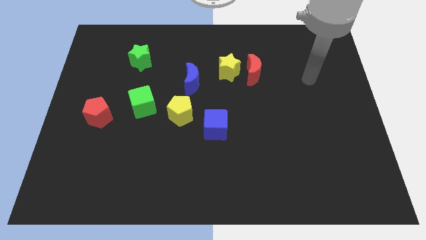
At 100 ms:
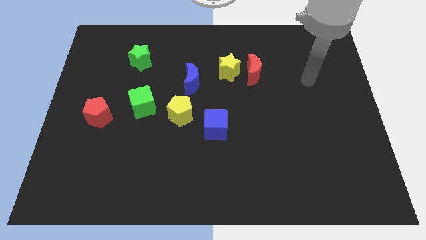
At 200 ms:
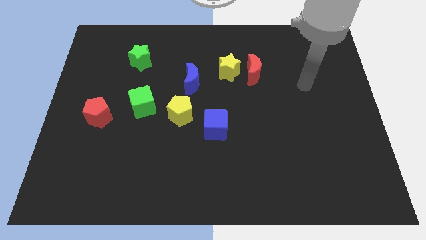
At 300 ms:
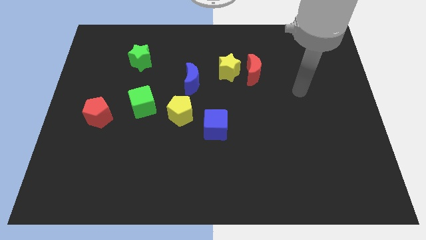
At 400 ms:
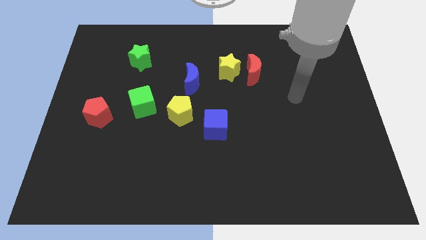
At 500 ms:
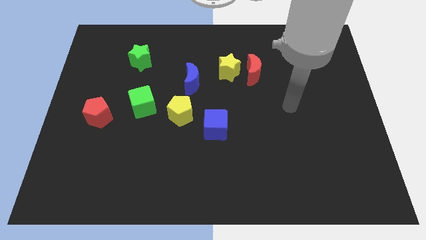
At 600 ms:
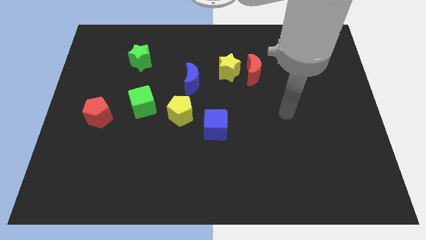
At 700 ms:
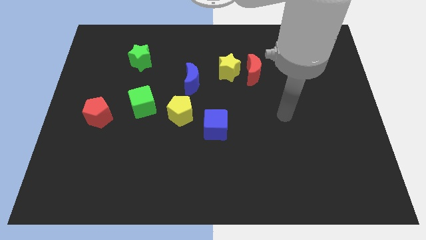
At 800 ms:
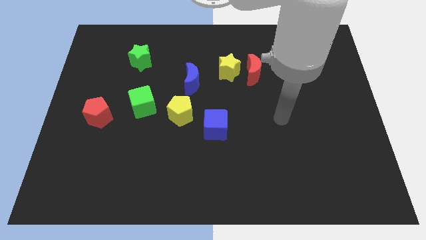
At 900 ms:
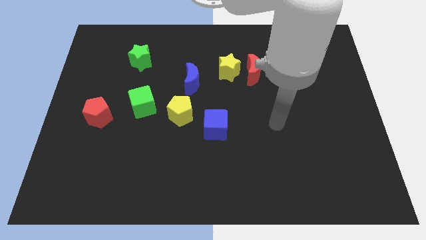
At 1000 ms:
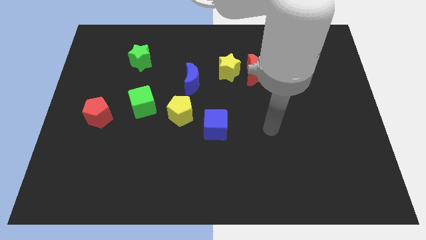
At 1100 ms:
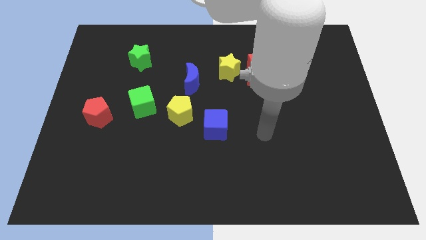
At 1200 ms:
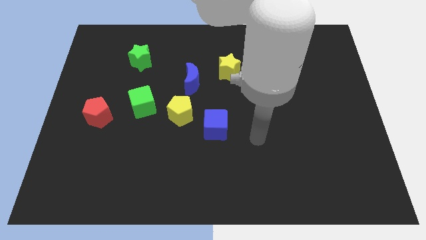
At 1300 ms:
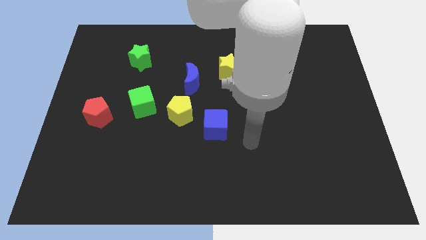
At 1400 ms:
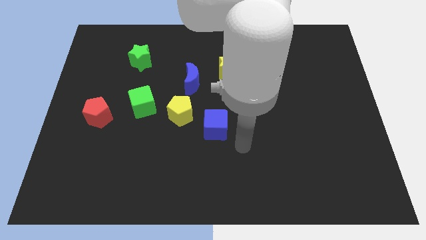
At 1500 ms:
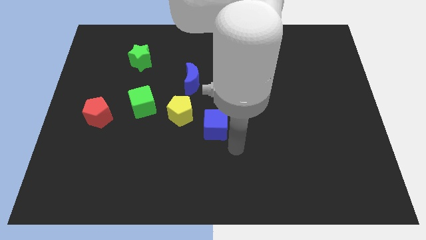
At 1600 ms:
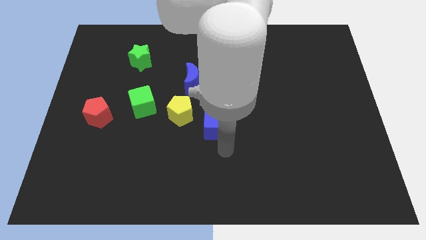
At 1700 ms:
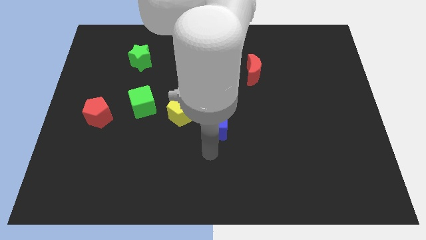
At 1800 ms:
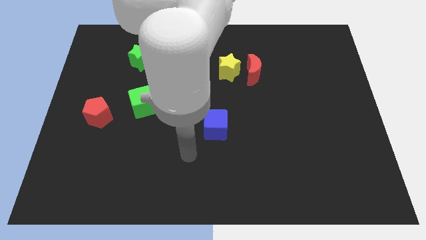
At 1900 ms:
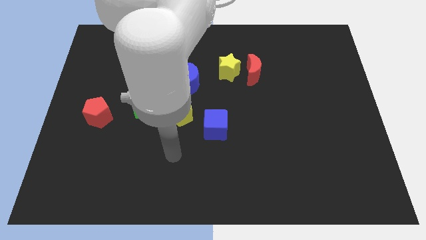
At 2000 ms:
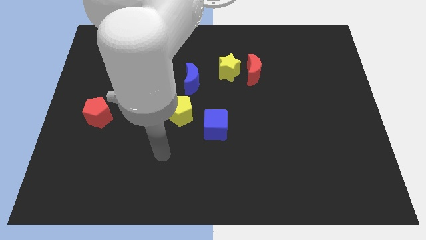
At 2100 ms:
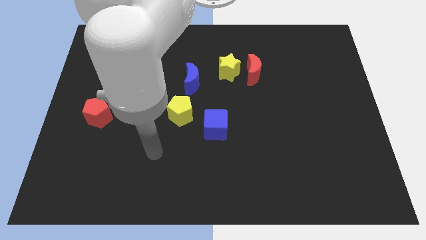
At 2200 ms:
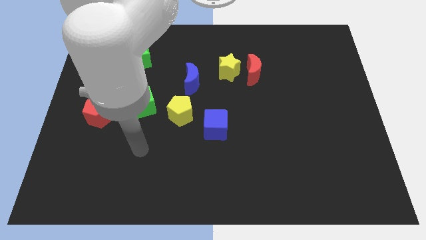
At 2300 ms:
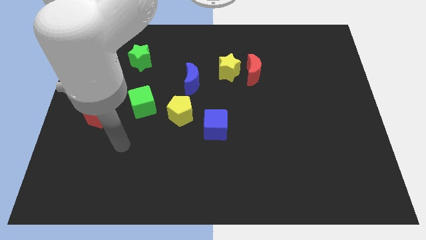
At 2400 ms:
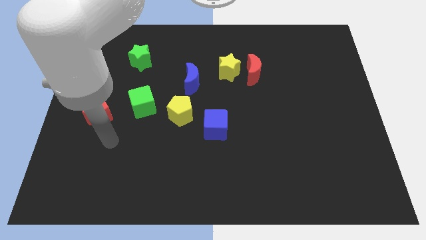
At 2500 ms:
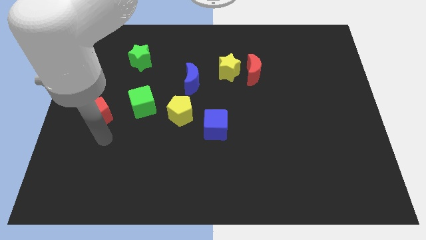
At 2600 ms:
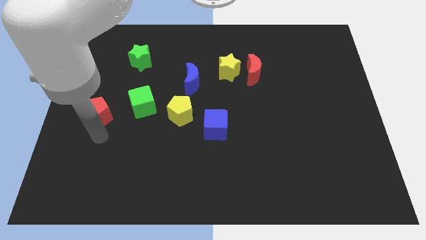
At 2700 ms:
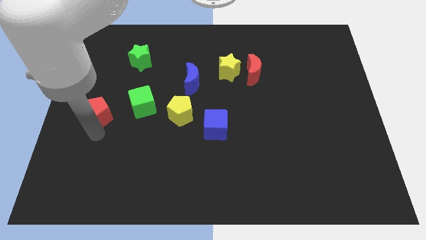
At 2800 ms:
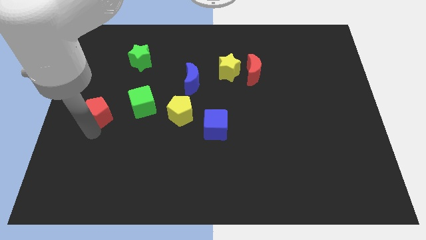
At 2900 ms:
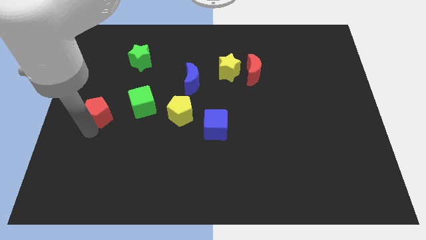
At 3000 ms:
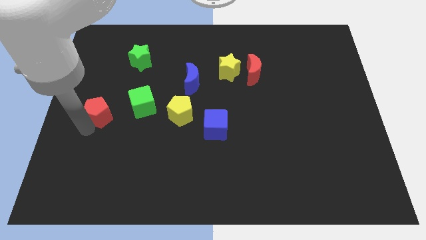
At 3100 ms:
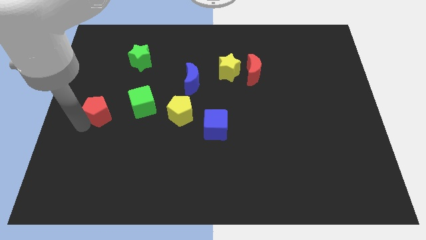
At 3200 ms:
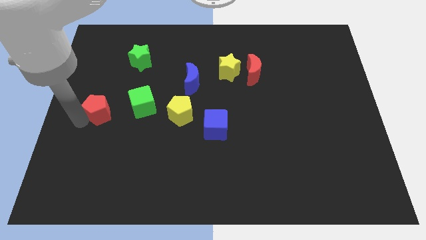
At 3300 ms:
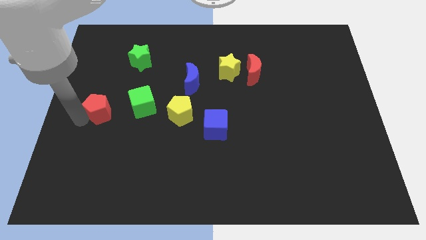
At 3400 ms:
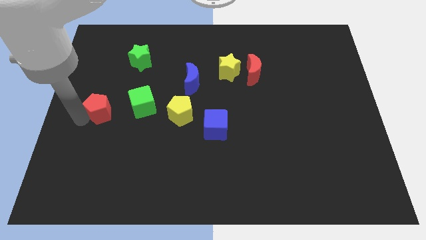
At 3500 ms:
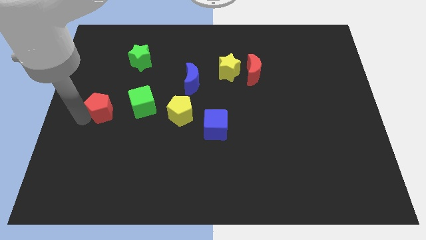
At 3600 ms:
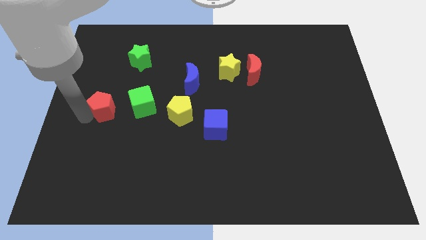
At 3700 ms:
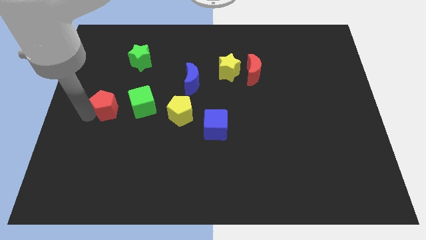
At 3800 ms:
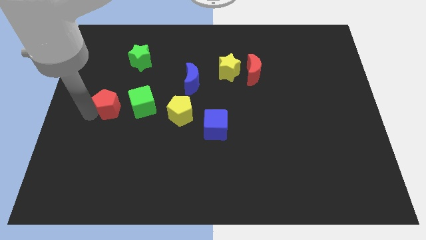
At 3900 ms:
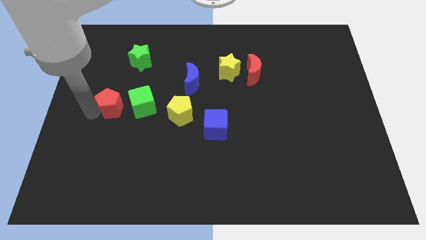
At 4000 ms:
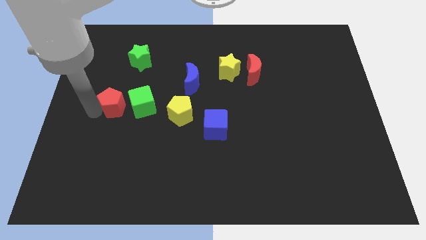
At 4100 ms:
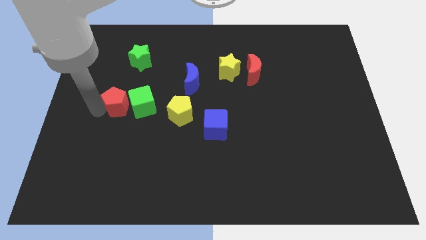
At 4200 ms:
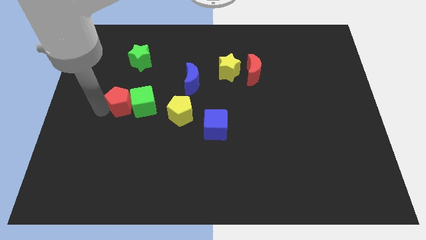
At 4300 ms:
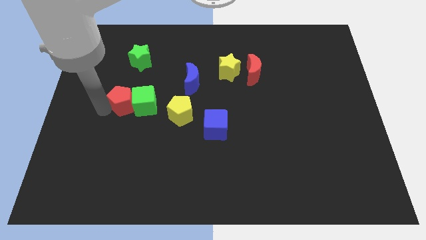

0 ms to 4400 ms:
slide the red pentagon to the green cube

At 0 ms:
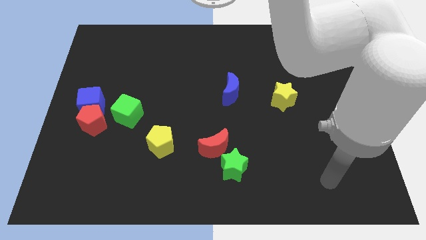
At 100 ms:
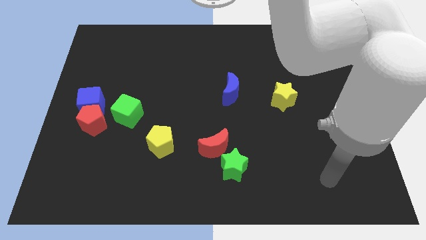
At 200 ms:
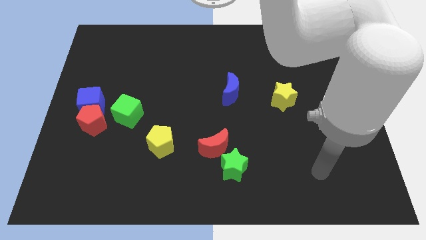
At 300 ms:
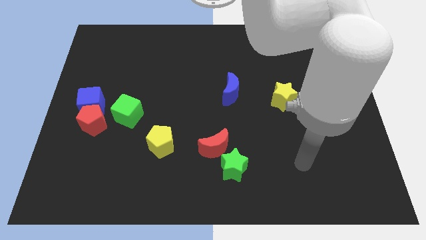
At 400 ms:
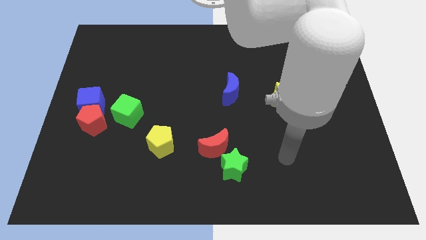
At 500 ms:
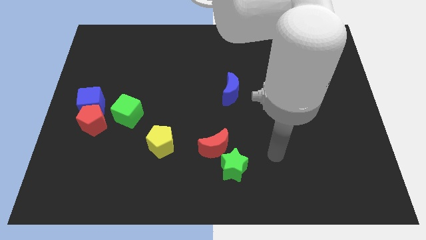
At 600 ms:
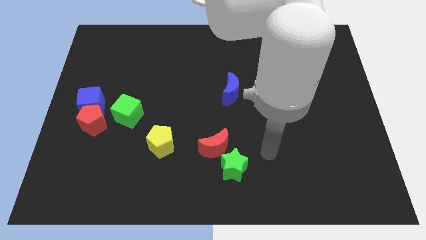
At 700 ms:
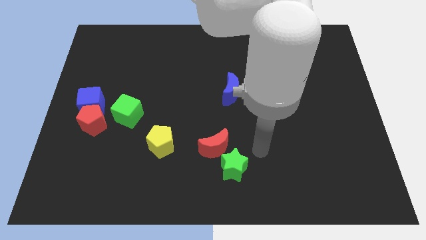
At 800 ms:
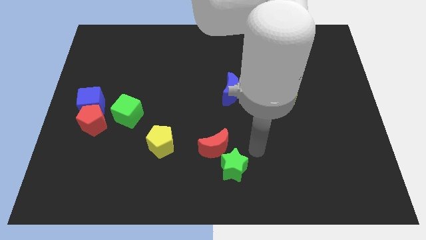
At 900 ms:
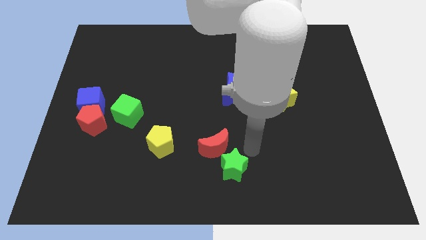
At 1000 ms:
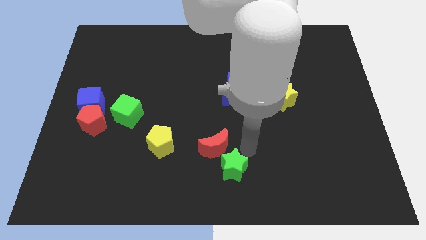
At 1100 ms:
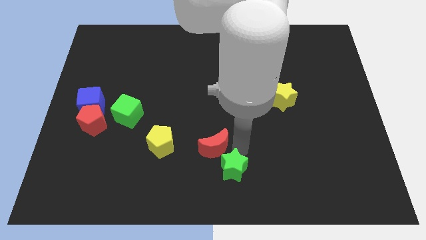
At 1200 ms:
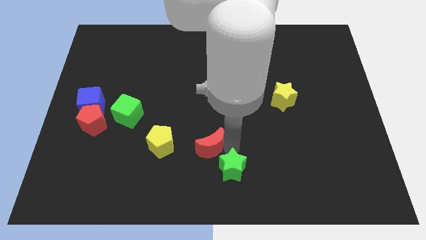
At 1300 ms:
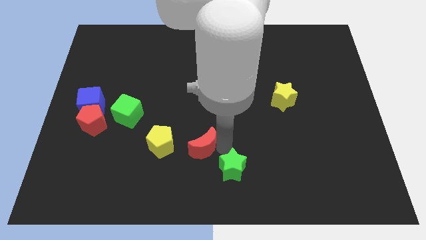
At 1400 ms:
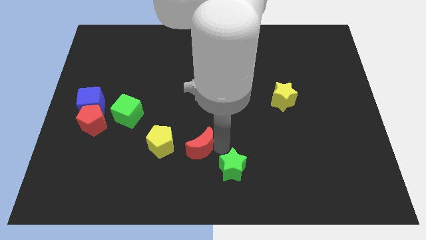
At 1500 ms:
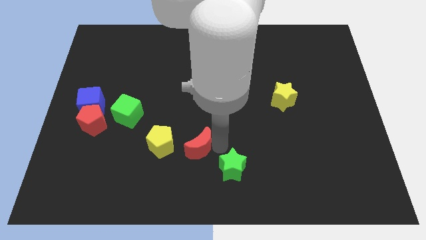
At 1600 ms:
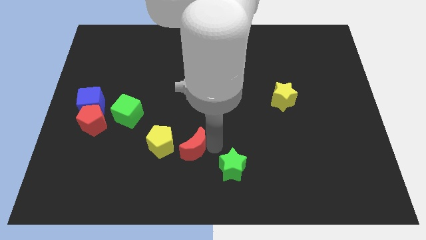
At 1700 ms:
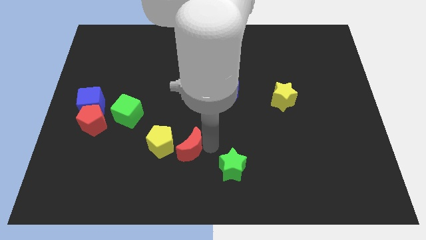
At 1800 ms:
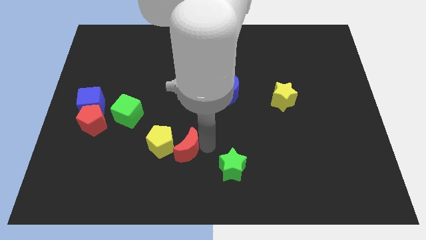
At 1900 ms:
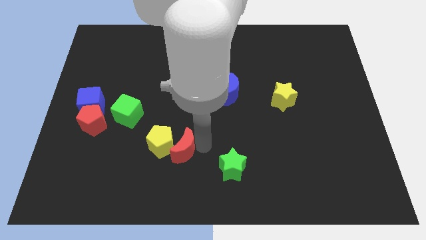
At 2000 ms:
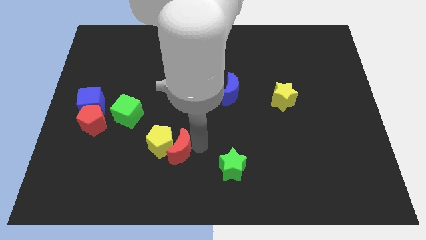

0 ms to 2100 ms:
put the red moon next to the yellow pentagon

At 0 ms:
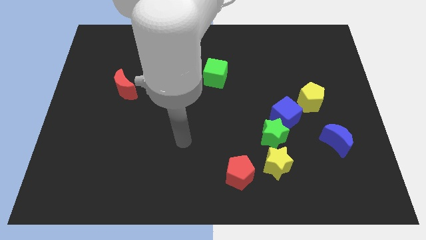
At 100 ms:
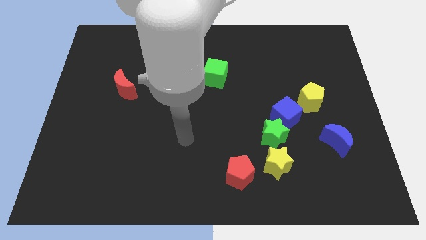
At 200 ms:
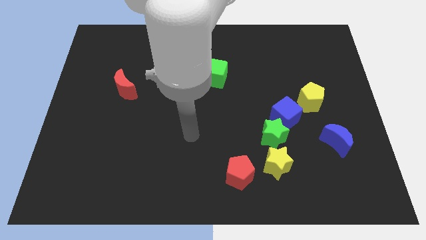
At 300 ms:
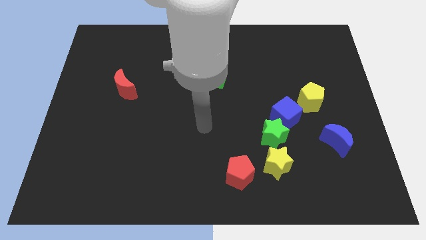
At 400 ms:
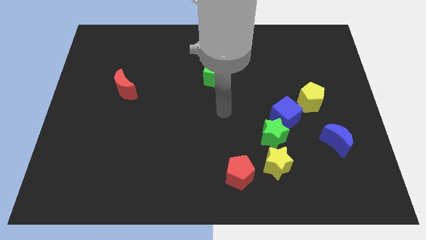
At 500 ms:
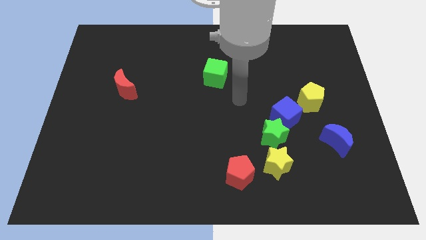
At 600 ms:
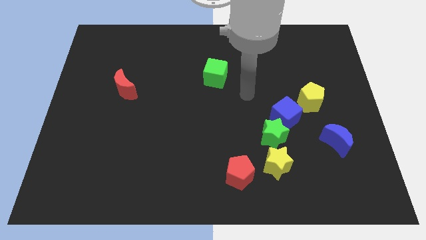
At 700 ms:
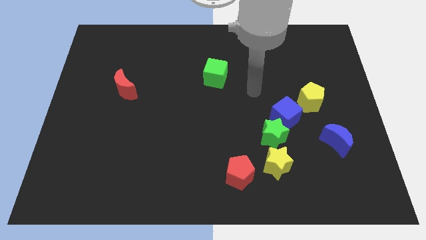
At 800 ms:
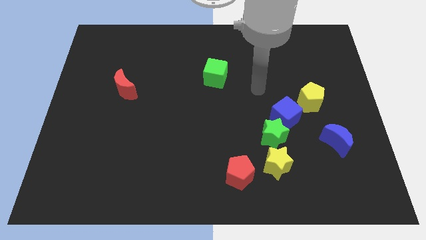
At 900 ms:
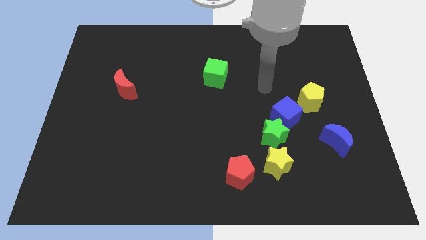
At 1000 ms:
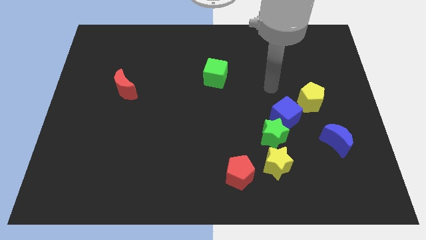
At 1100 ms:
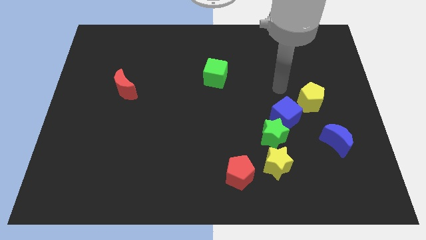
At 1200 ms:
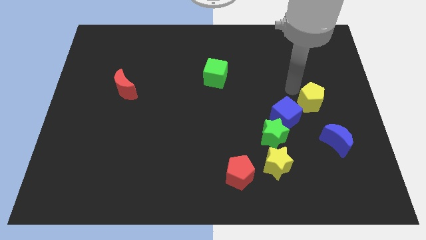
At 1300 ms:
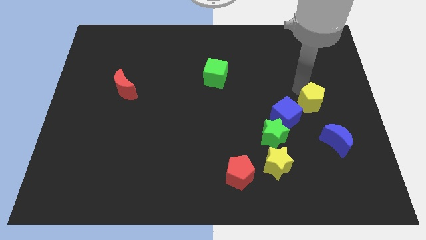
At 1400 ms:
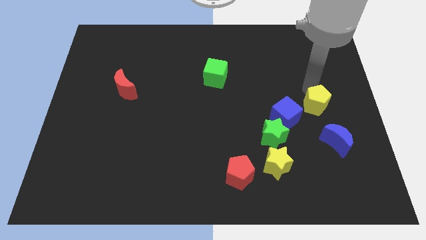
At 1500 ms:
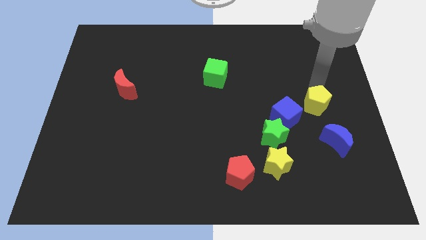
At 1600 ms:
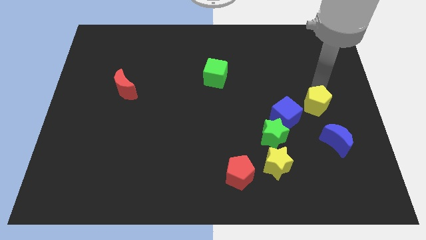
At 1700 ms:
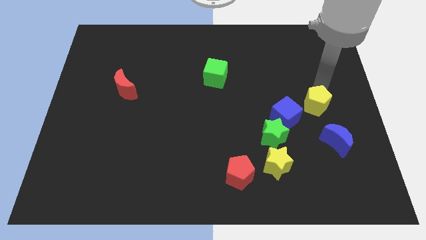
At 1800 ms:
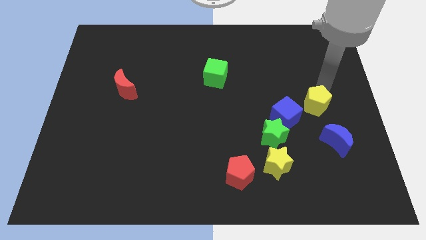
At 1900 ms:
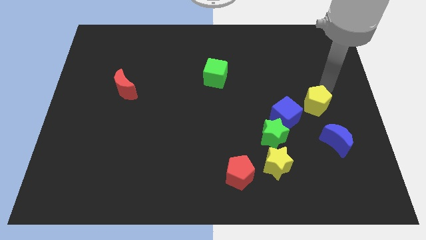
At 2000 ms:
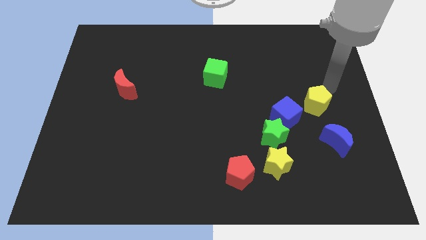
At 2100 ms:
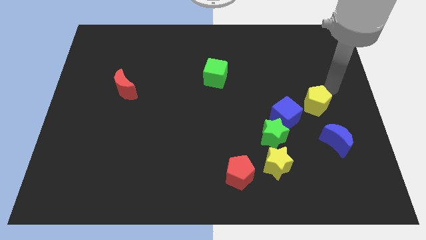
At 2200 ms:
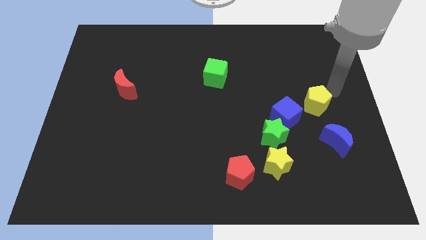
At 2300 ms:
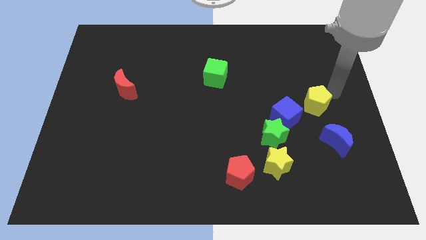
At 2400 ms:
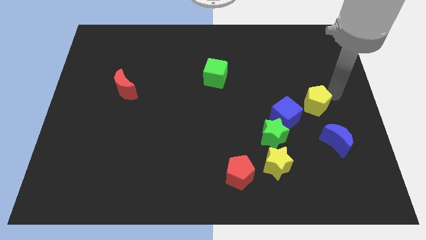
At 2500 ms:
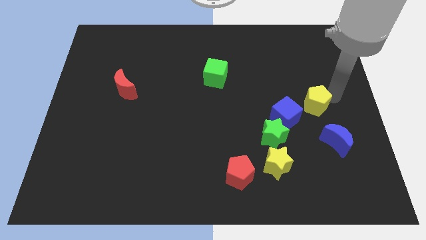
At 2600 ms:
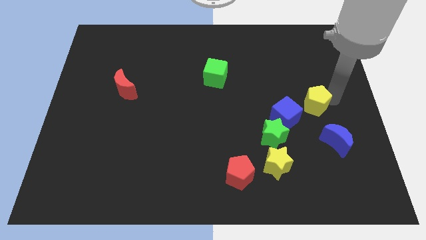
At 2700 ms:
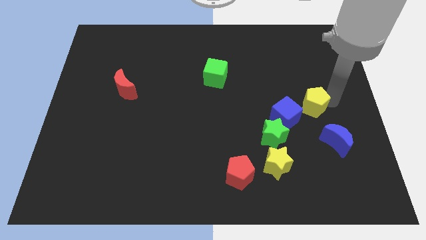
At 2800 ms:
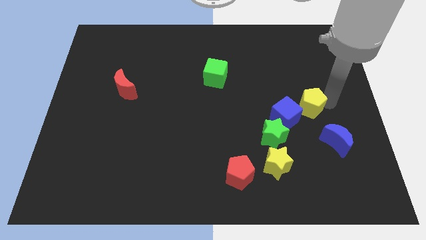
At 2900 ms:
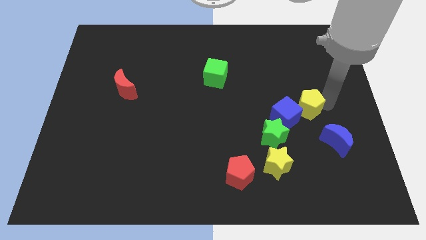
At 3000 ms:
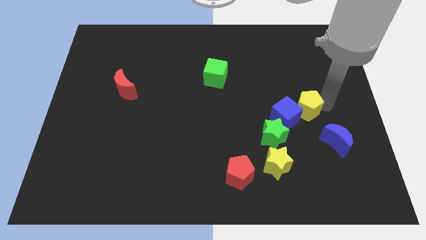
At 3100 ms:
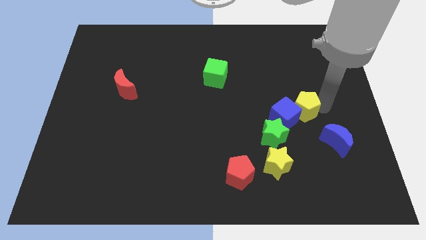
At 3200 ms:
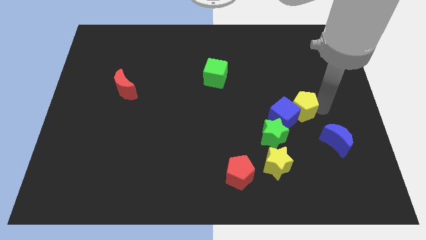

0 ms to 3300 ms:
slide the yellow pentagon next to the blue cube
